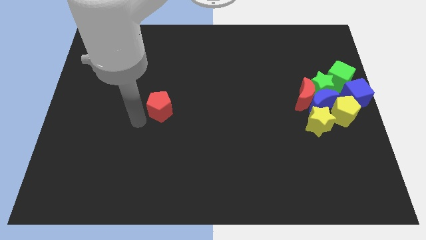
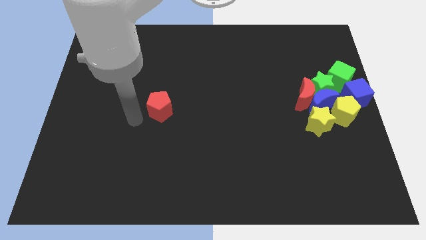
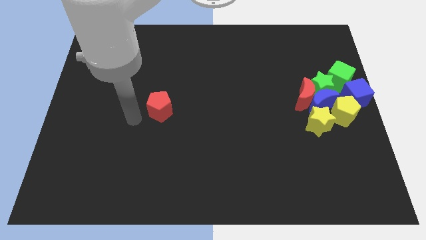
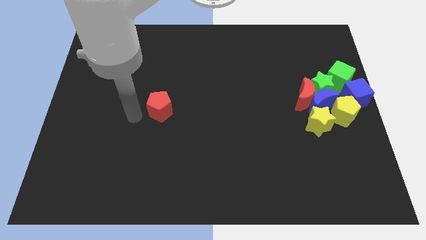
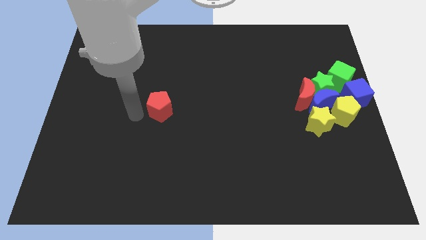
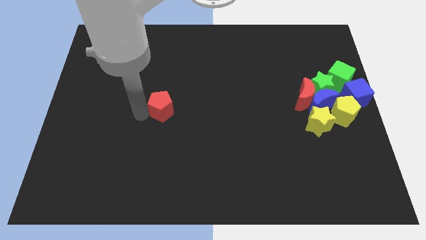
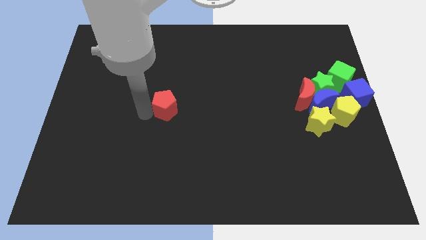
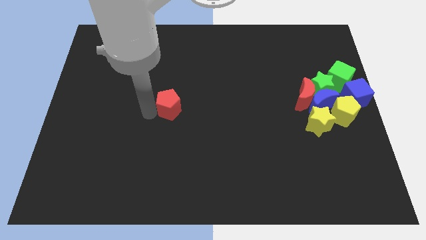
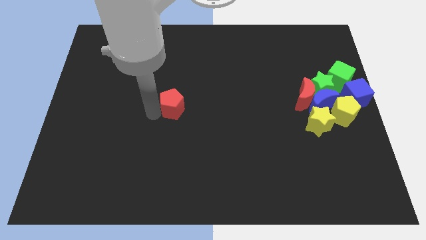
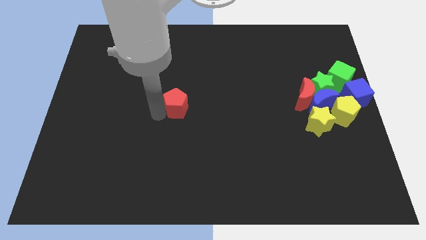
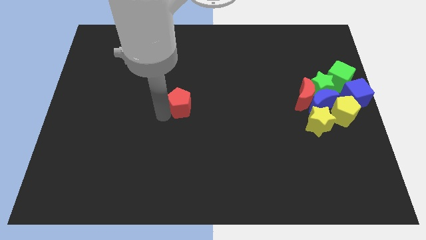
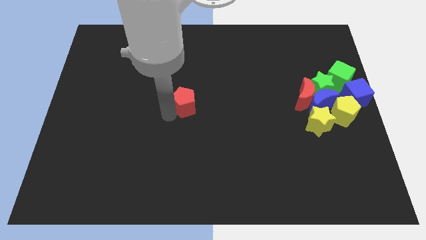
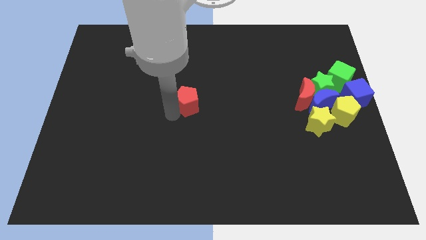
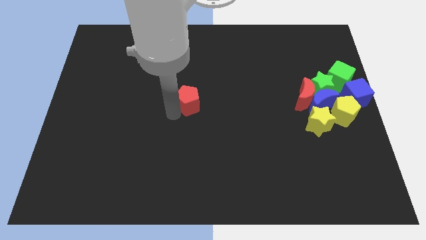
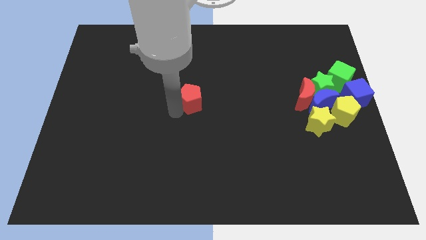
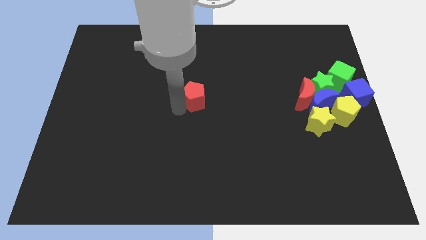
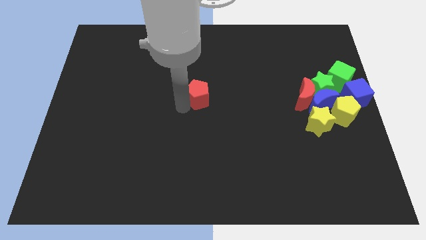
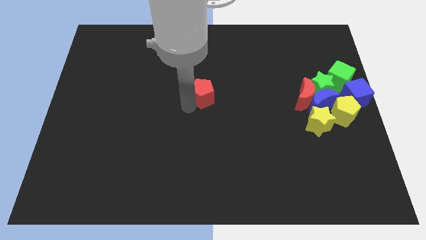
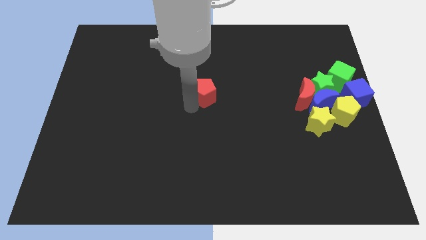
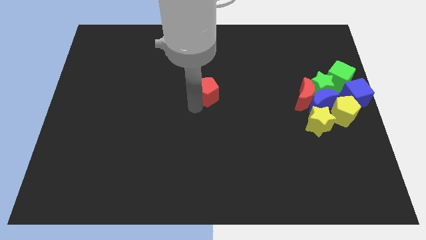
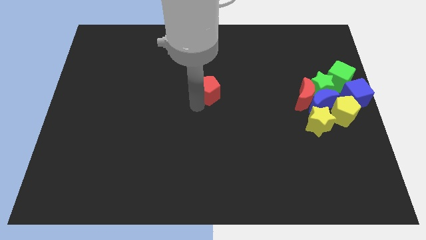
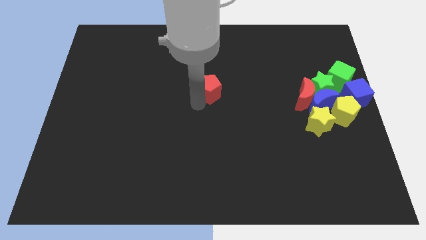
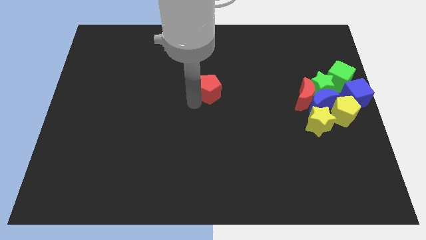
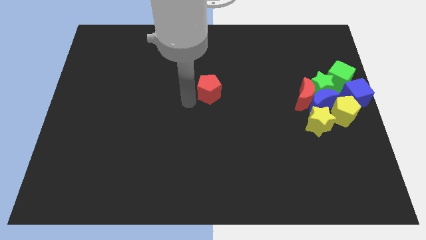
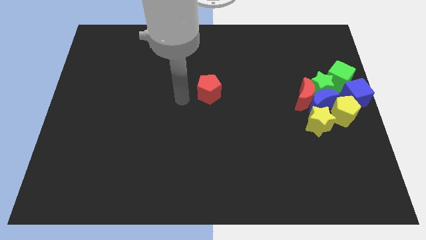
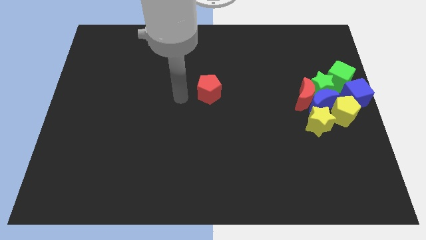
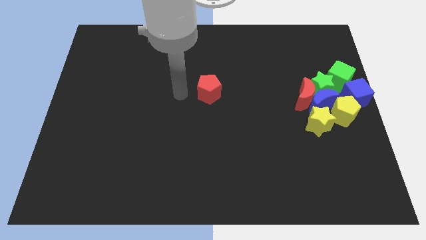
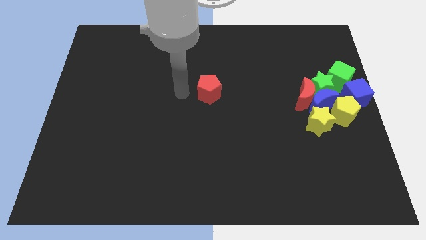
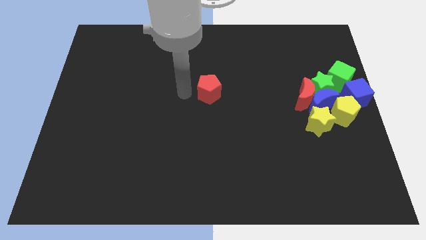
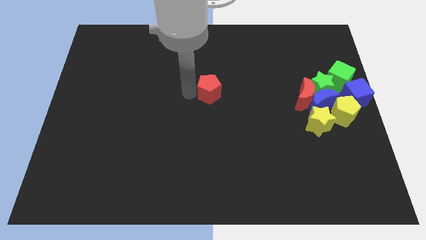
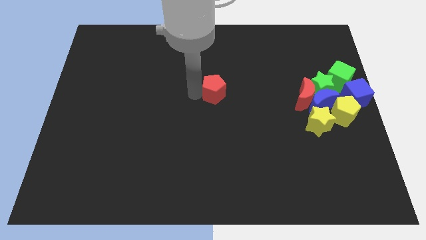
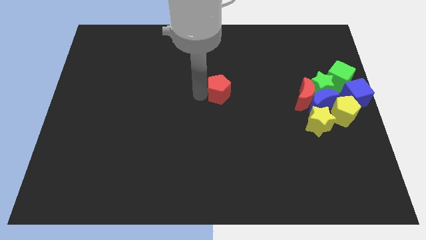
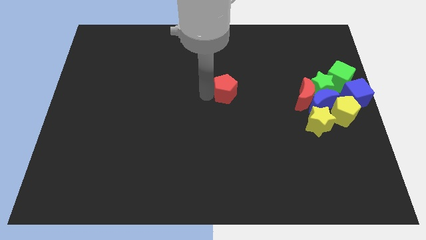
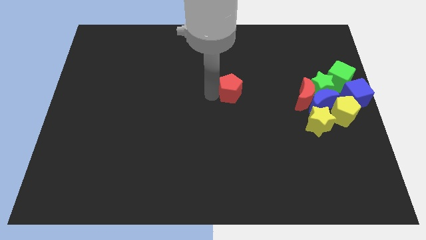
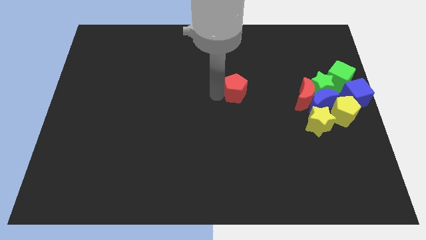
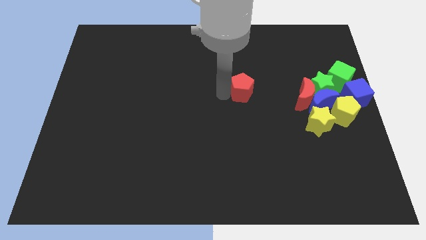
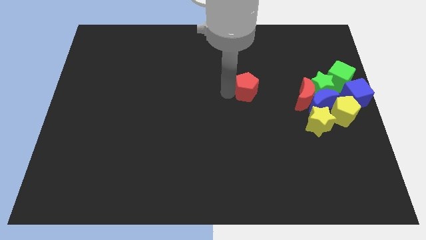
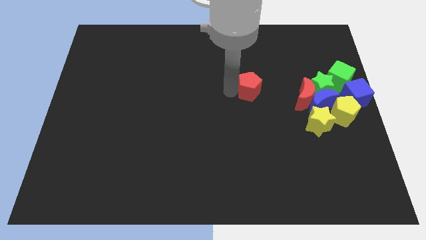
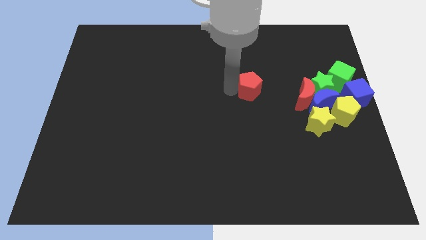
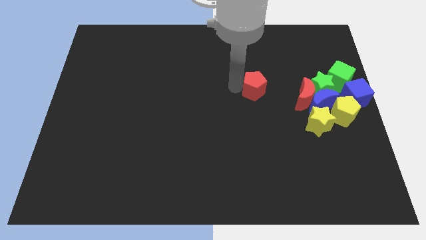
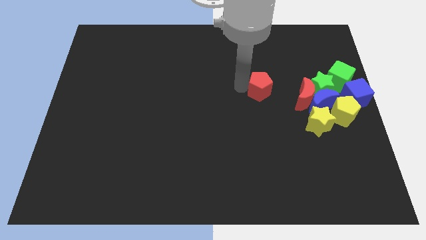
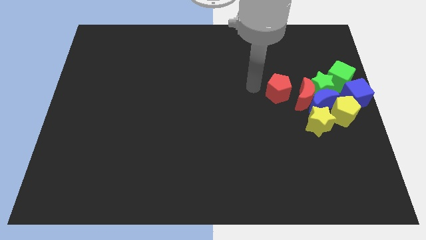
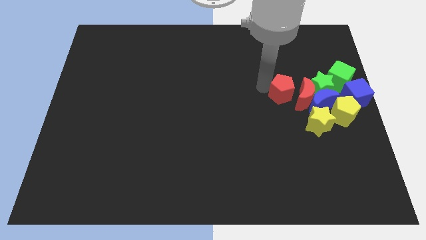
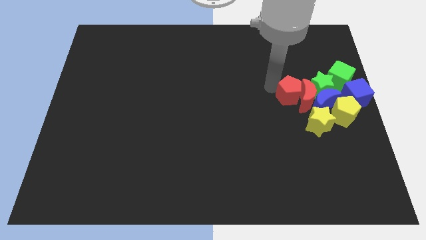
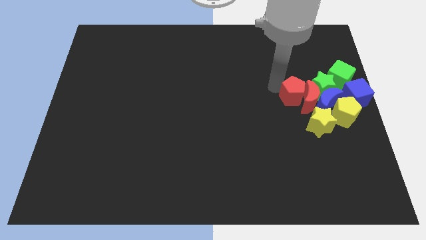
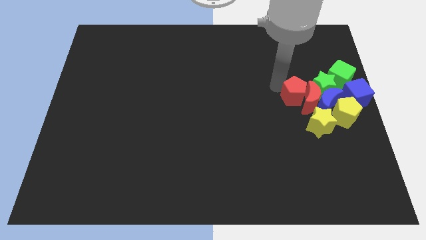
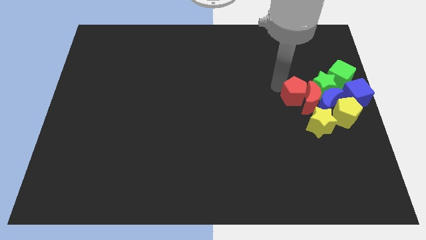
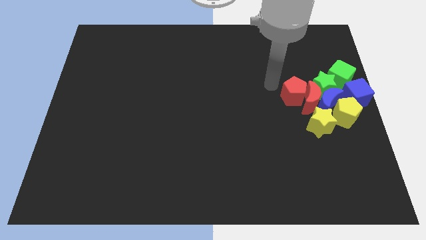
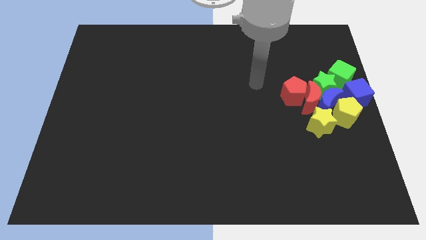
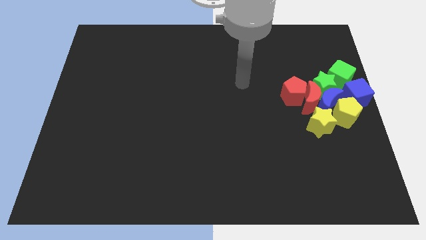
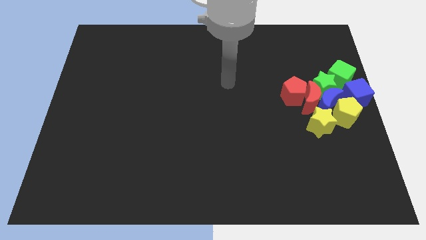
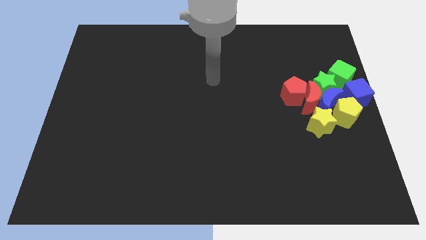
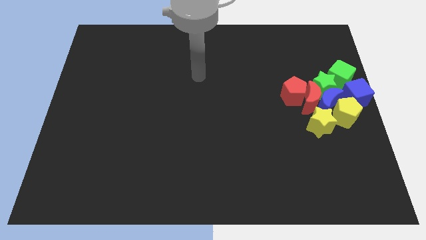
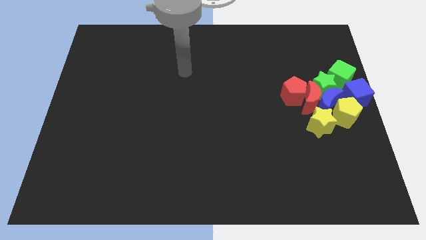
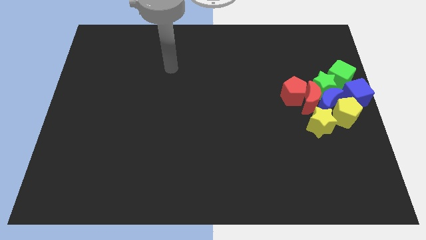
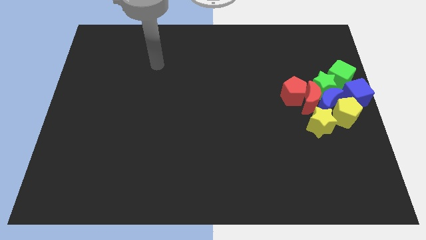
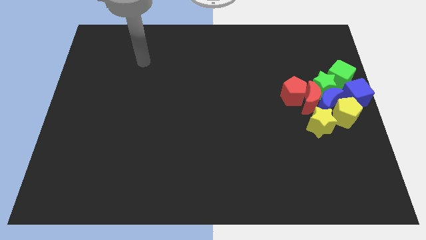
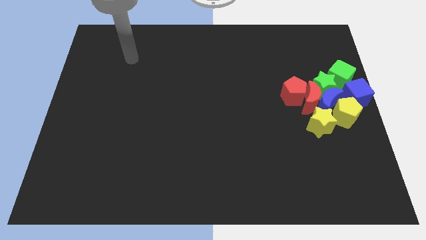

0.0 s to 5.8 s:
push the red pentagon into the group of blocks

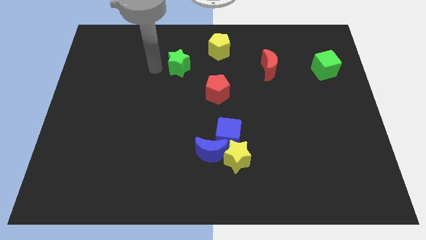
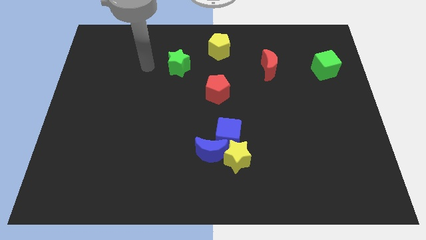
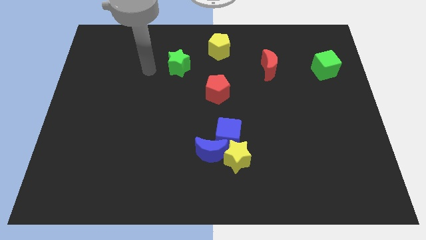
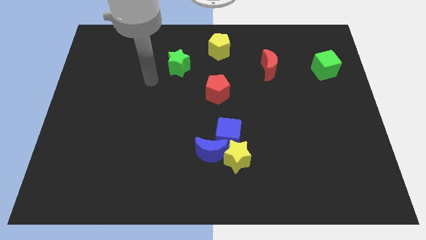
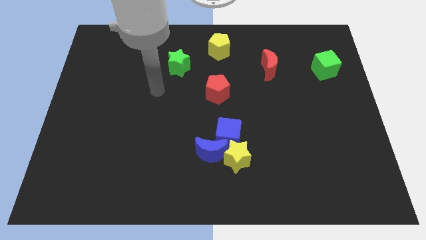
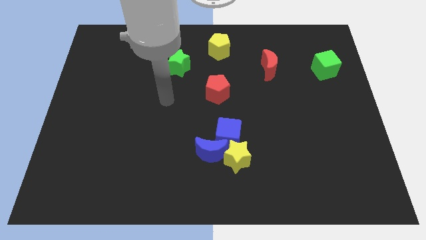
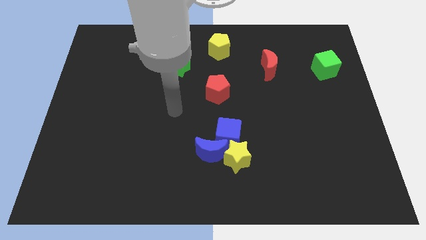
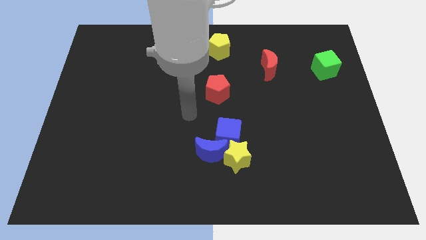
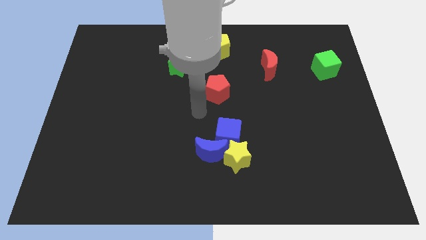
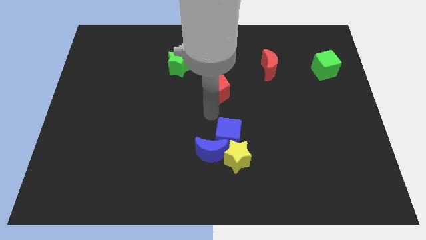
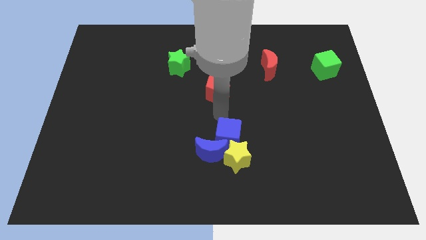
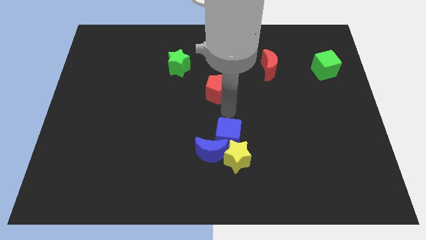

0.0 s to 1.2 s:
point your arm at the bottom of the red pentagon

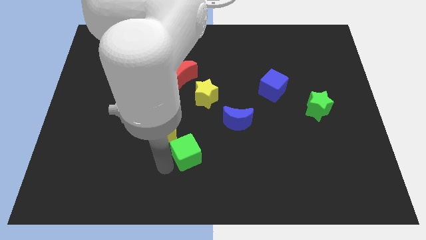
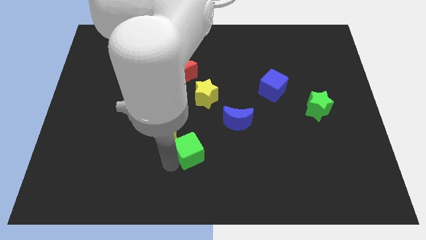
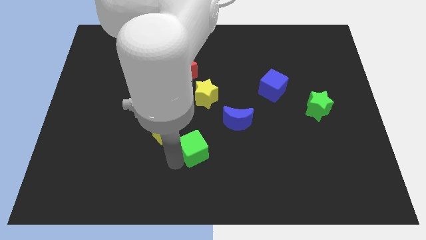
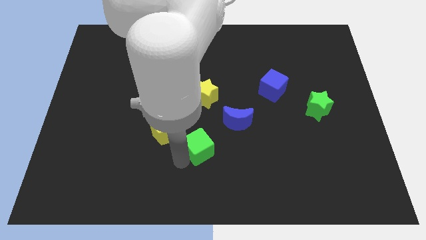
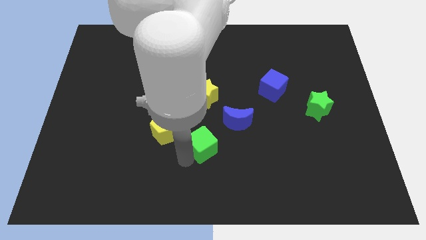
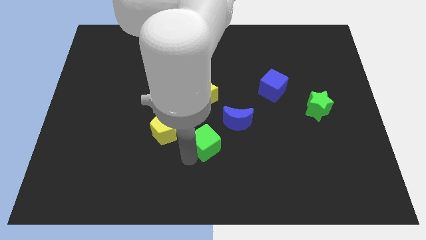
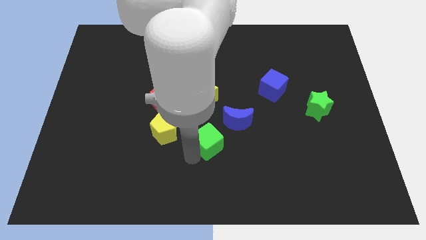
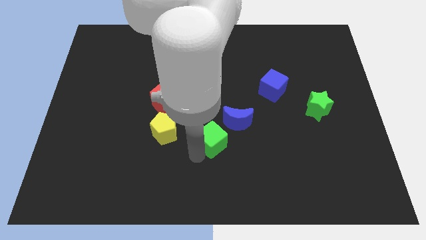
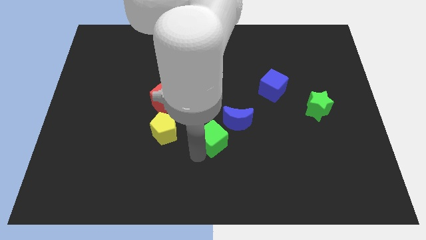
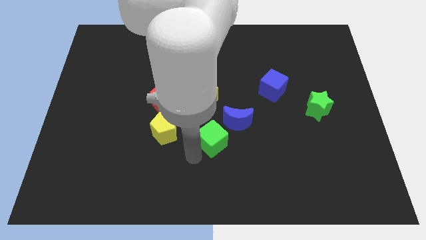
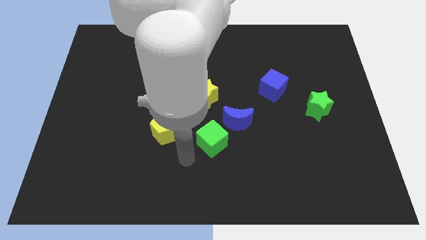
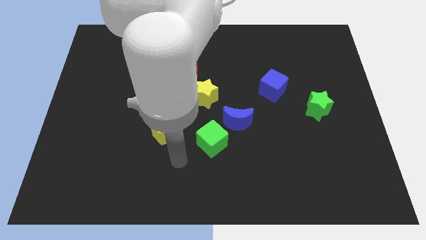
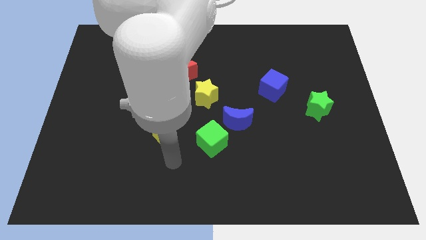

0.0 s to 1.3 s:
push the green cube to the bottom left of the blue crescent

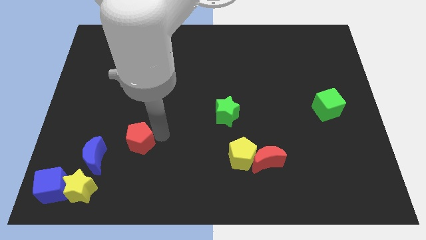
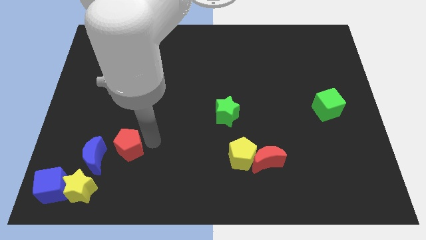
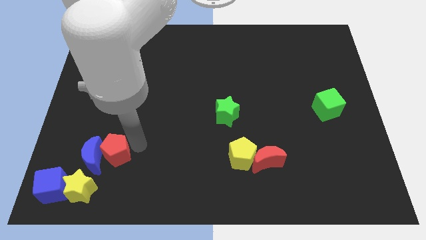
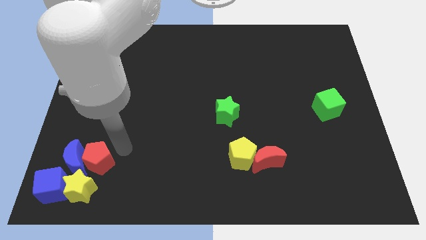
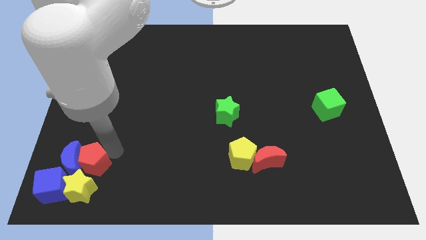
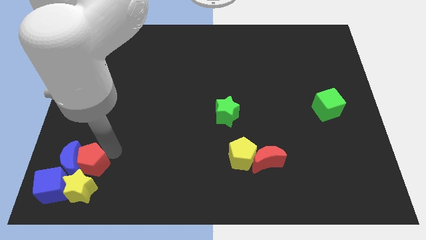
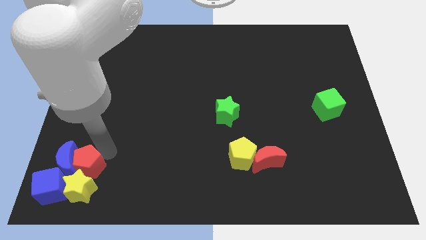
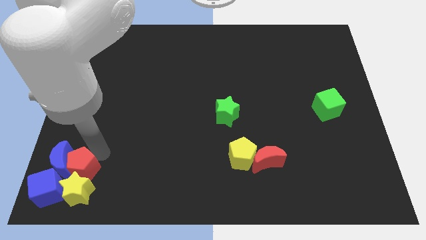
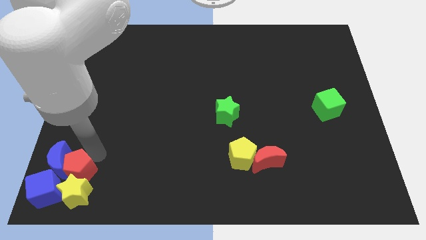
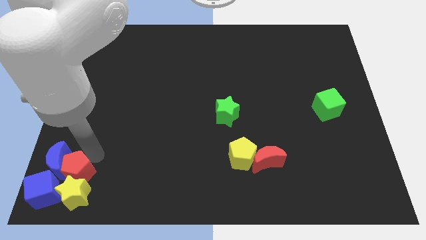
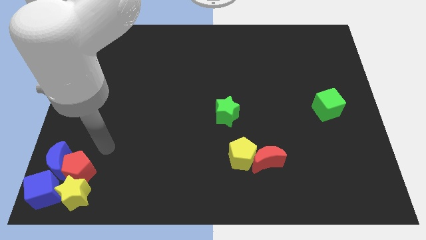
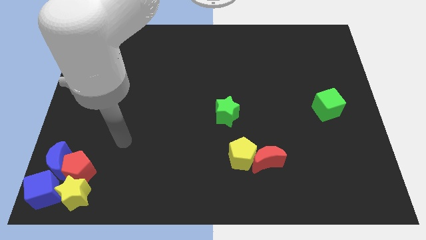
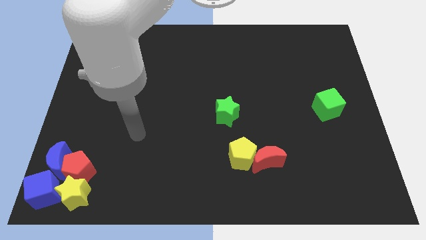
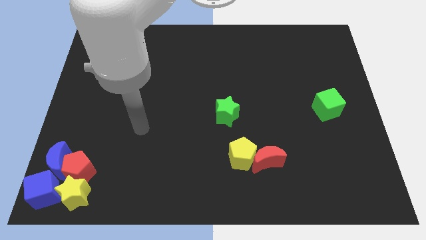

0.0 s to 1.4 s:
push the red pentagon into the blue crescent
